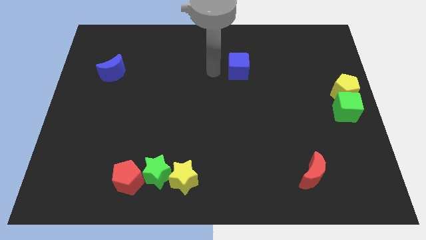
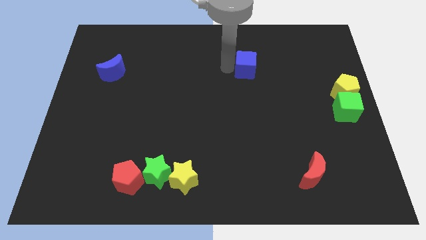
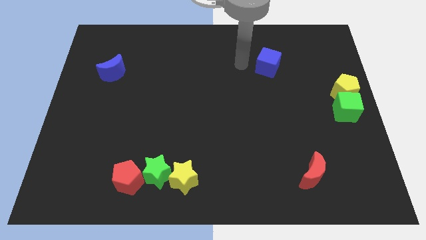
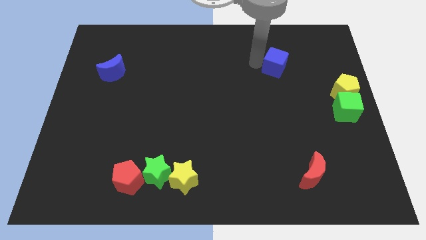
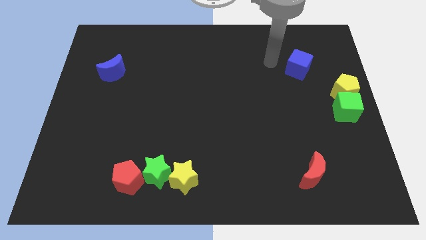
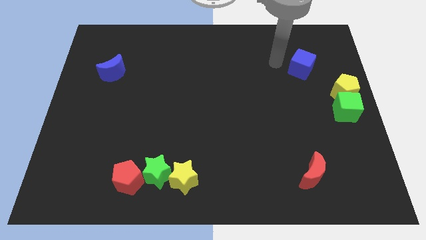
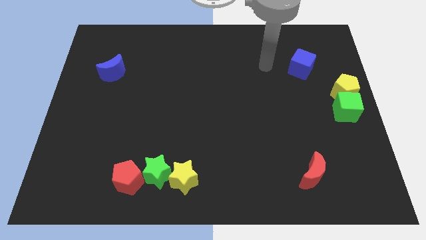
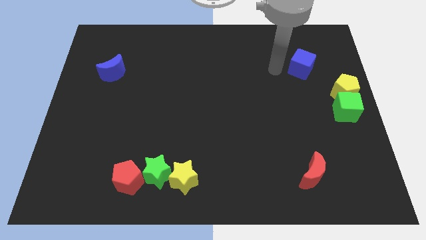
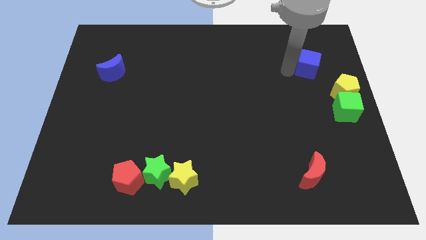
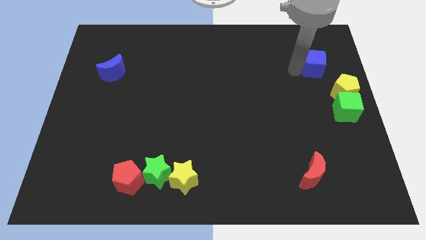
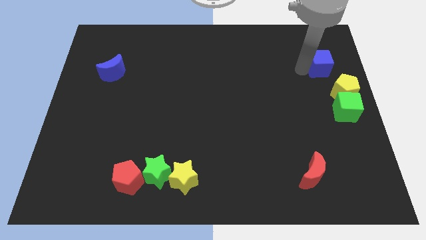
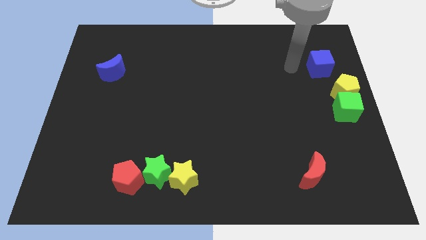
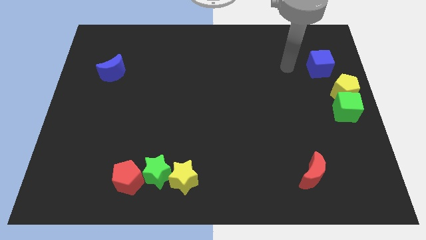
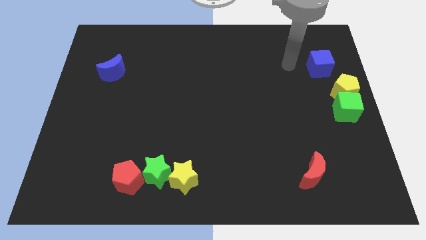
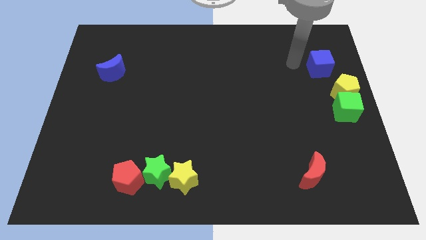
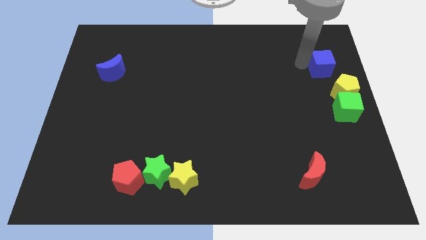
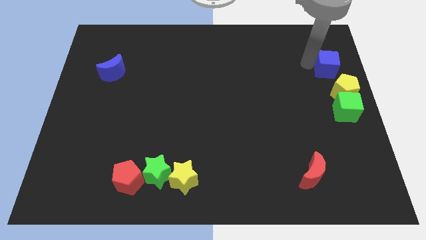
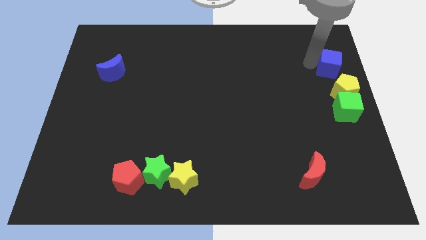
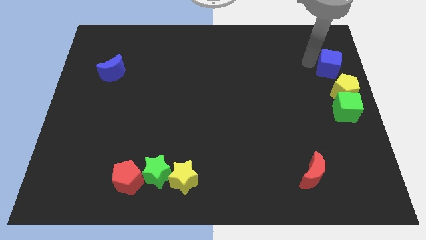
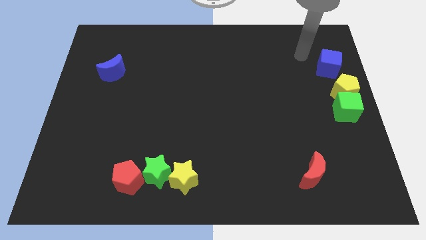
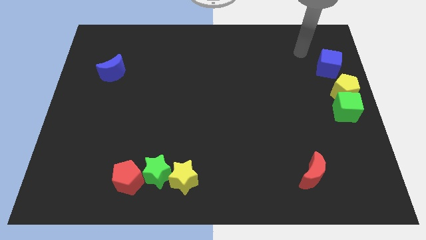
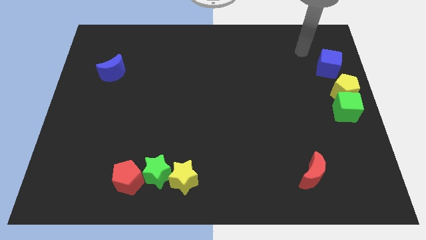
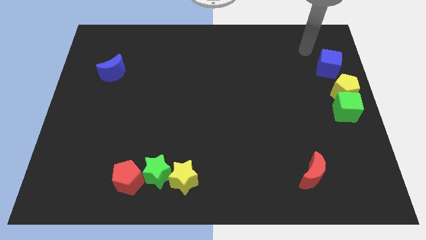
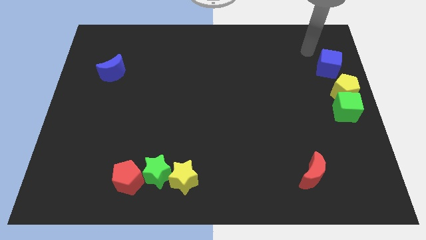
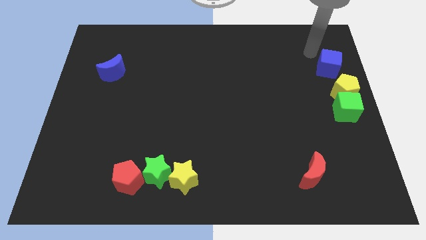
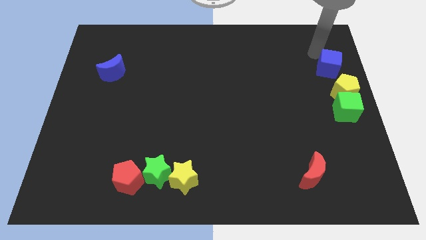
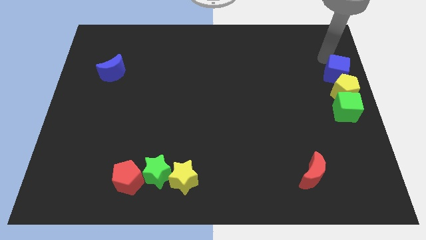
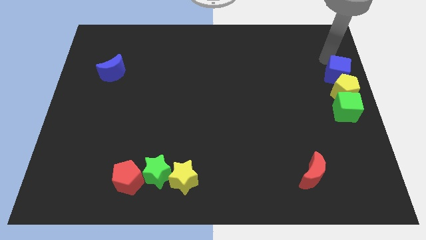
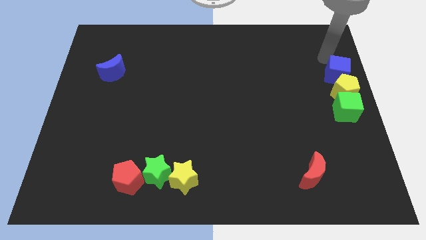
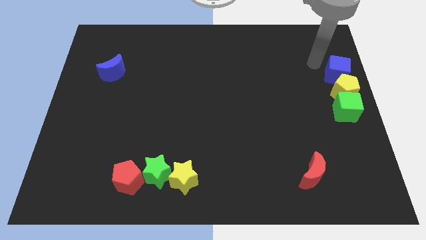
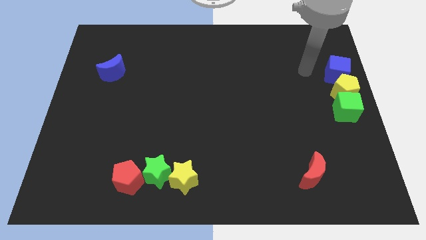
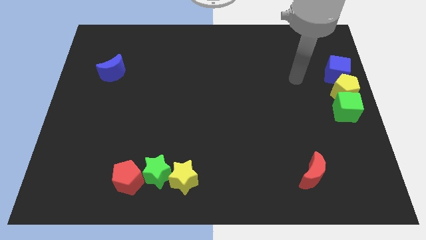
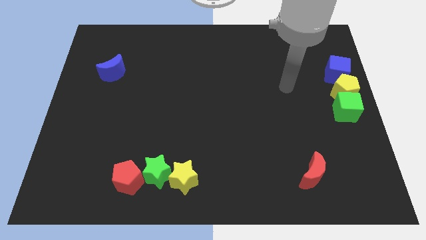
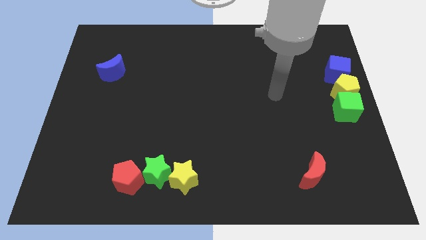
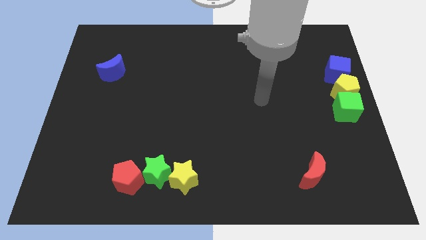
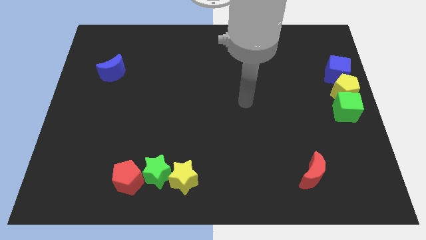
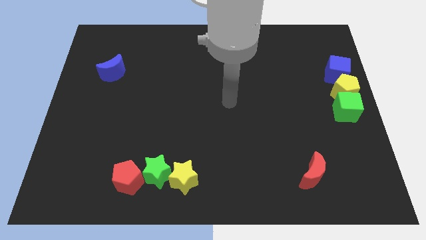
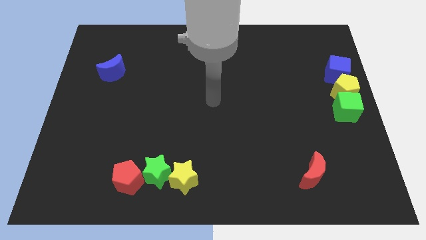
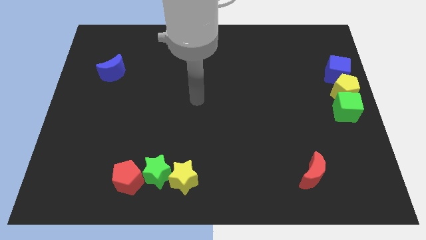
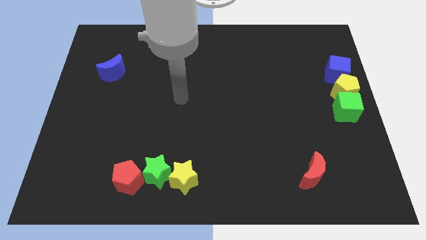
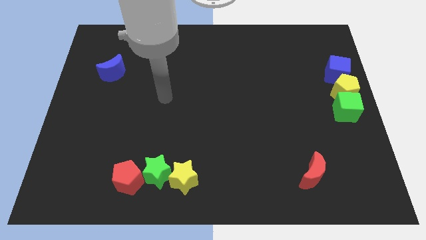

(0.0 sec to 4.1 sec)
place the blue cube near the yellow pentagon

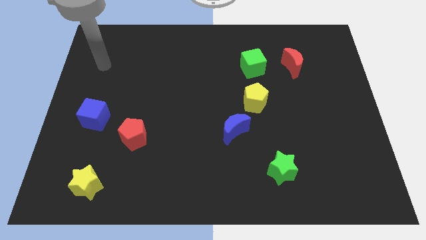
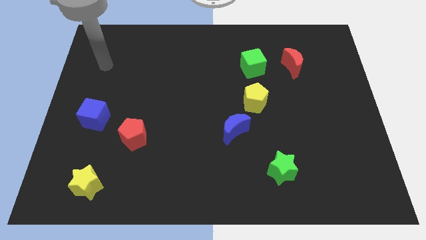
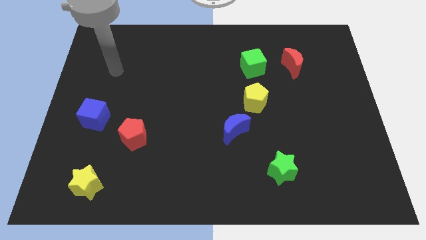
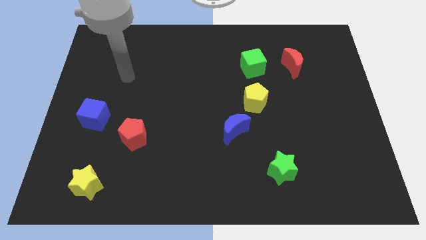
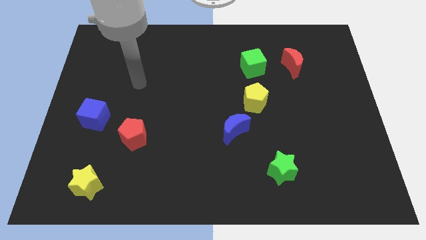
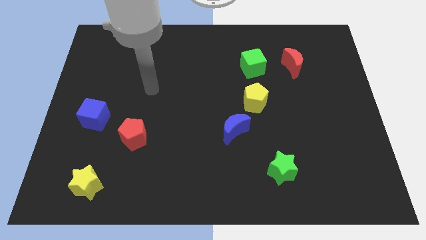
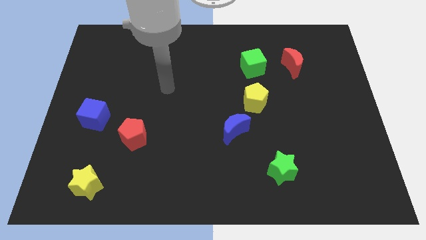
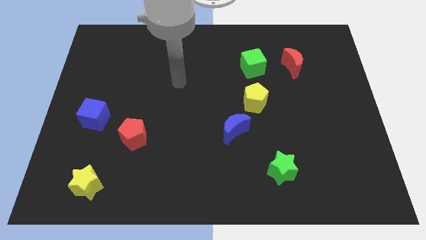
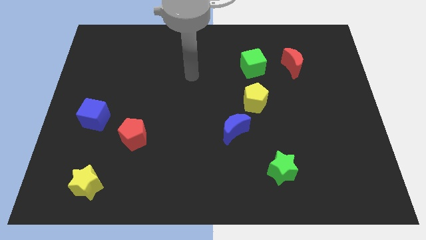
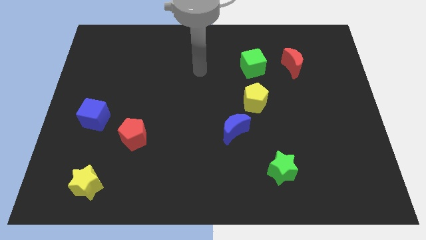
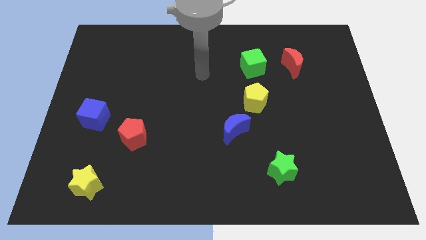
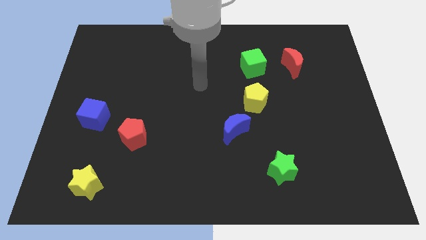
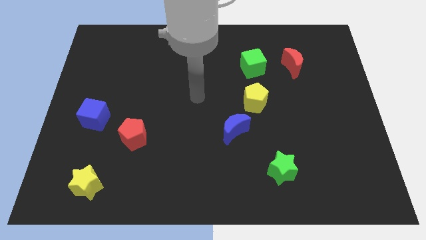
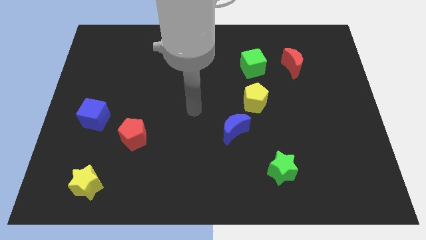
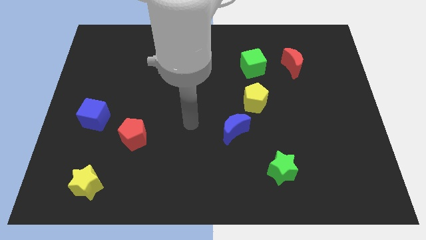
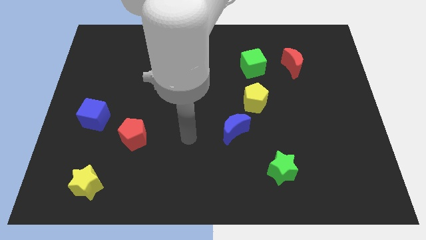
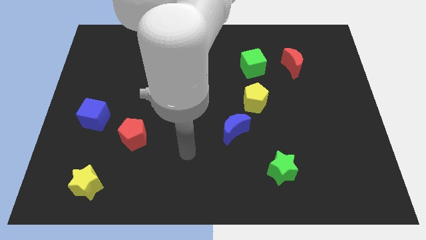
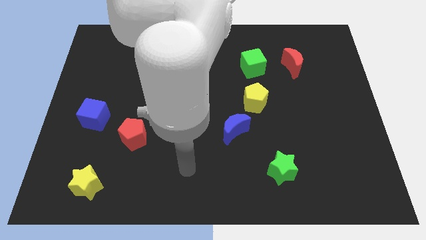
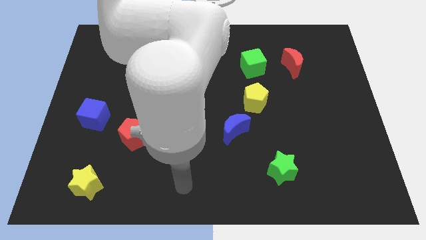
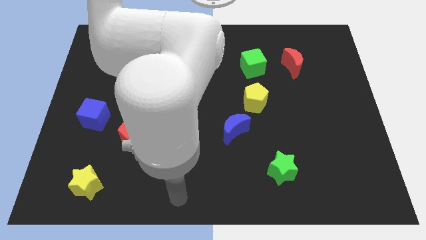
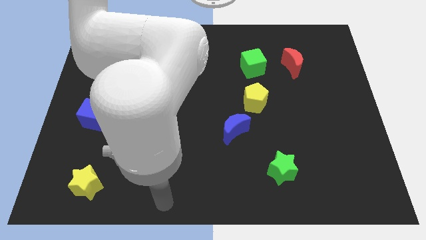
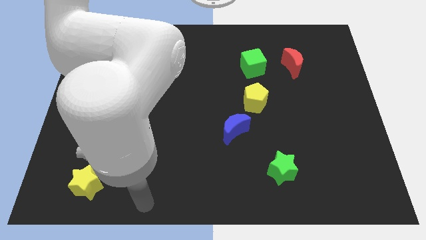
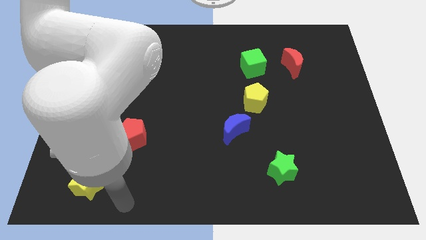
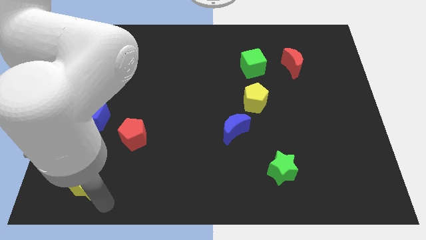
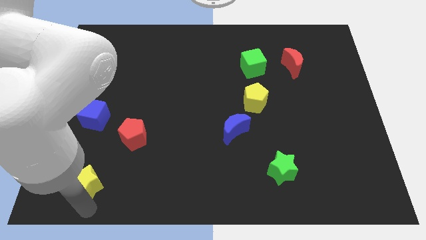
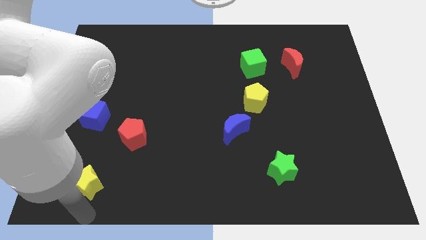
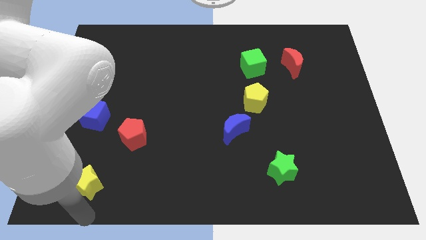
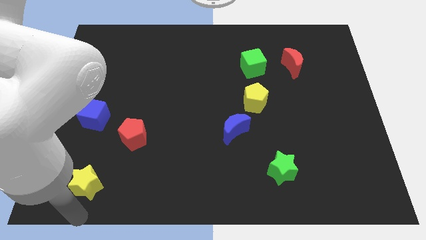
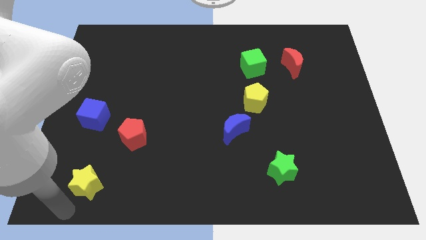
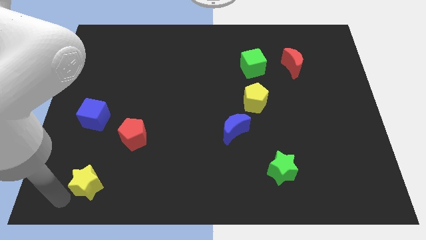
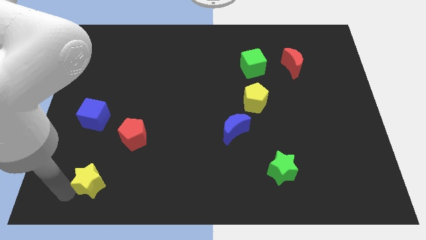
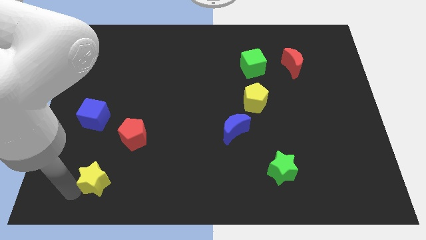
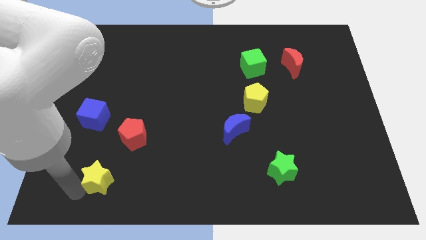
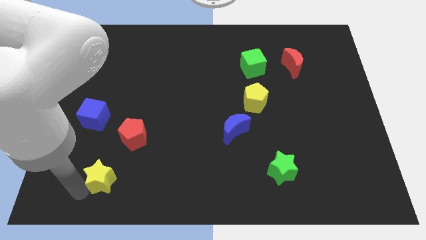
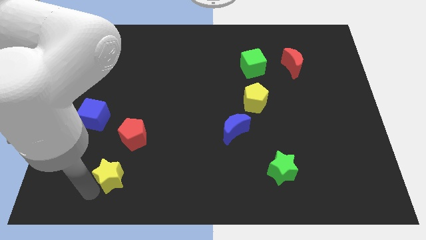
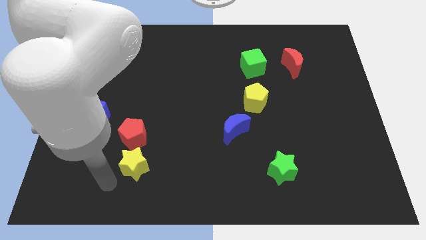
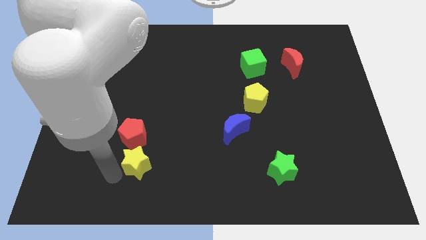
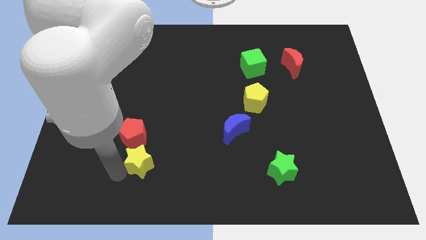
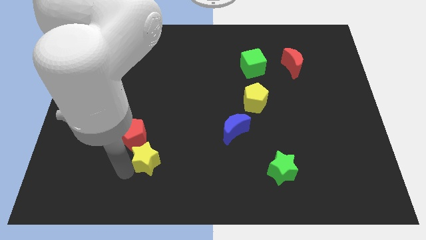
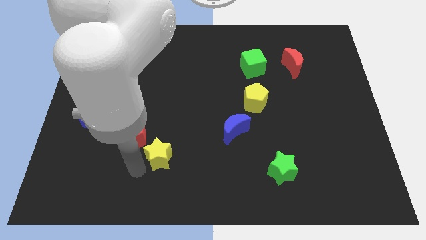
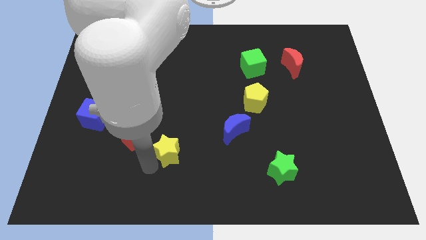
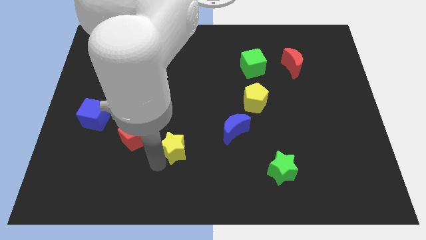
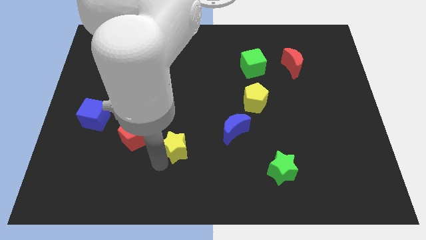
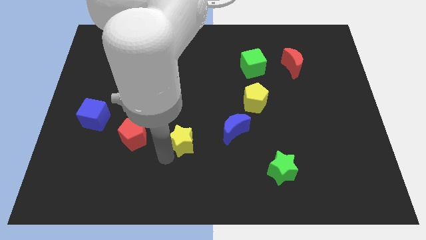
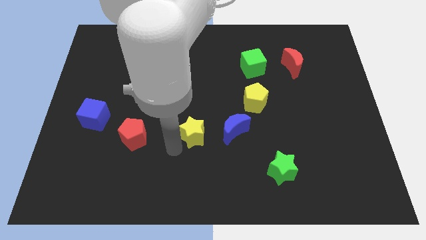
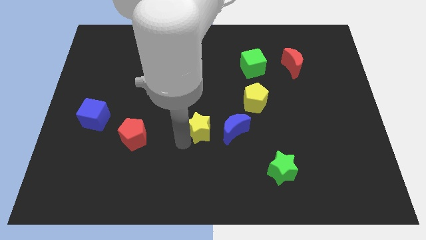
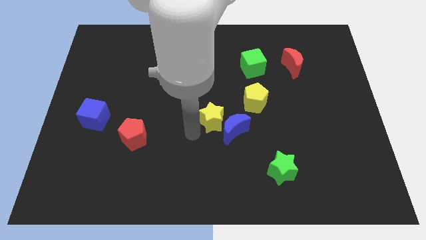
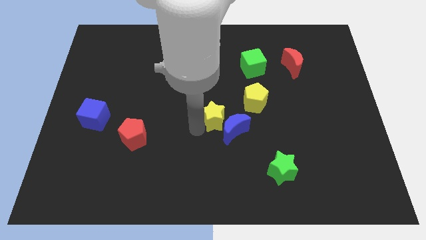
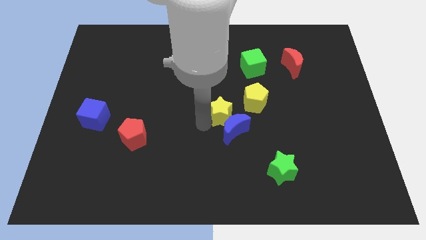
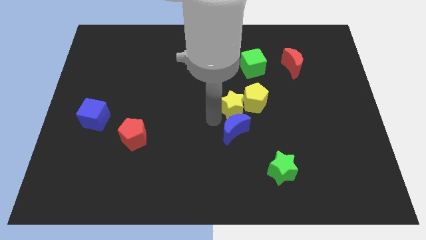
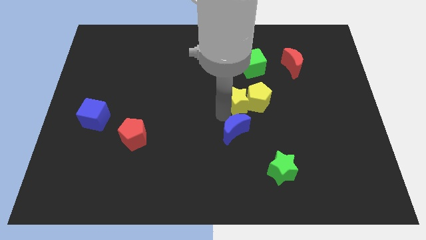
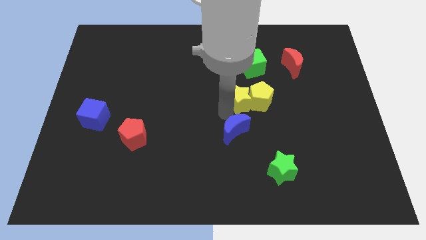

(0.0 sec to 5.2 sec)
push the yellow star to the left of the yellow pentagon
